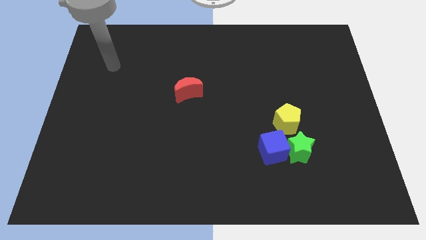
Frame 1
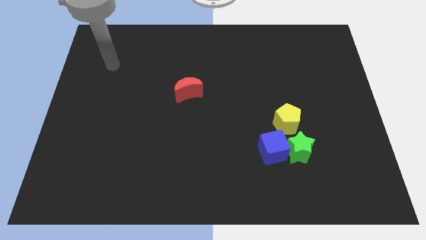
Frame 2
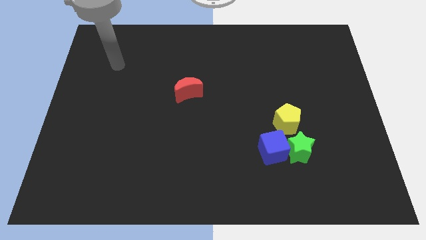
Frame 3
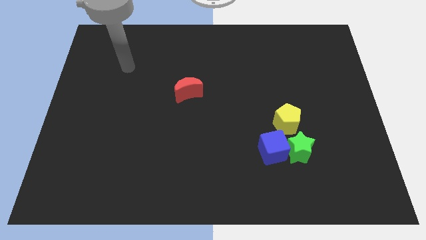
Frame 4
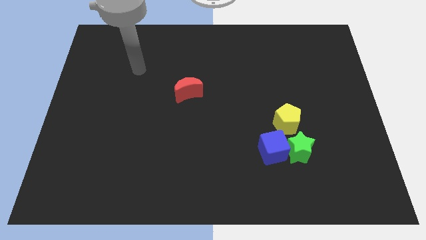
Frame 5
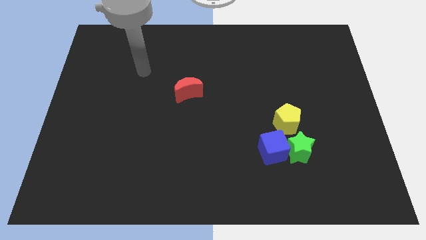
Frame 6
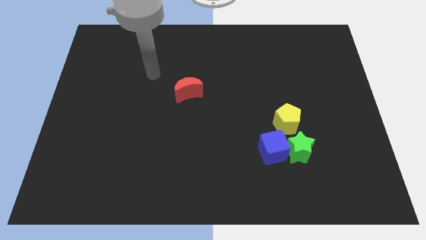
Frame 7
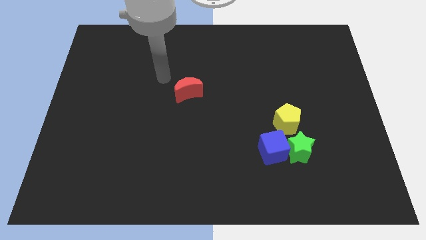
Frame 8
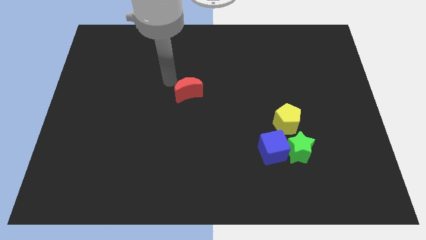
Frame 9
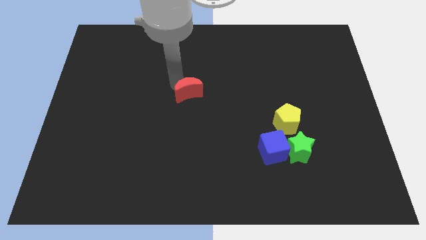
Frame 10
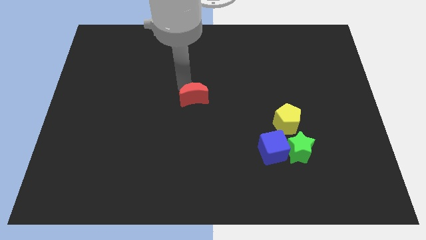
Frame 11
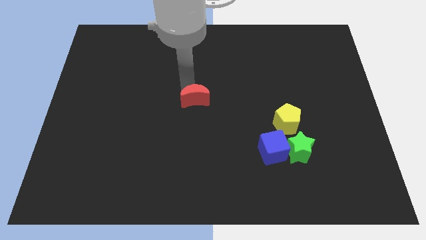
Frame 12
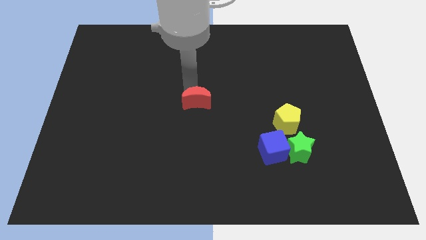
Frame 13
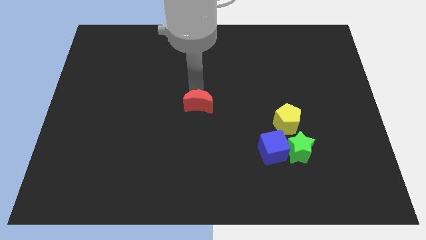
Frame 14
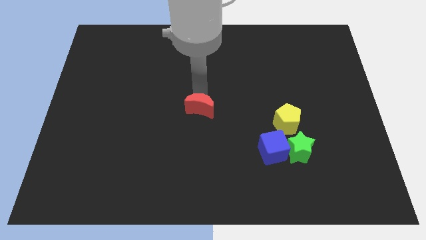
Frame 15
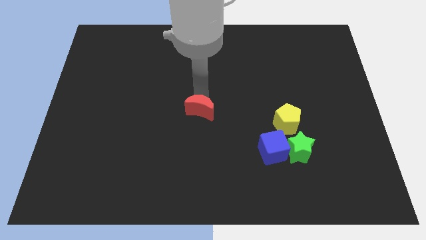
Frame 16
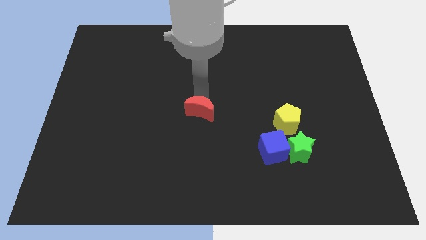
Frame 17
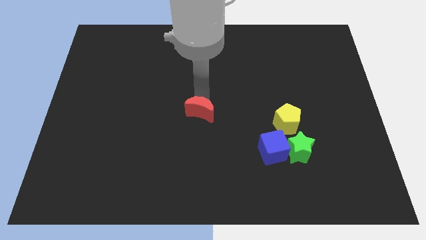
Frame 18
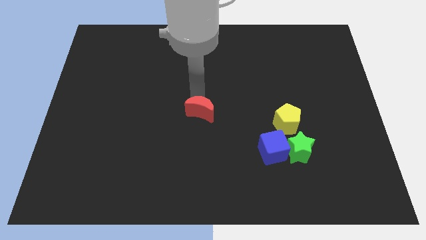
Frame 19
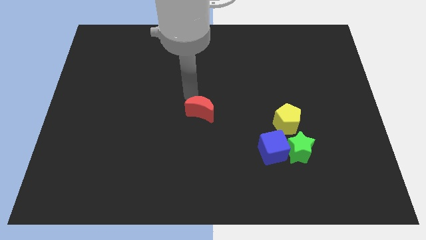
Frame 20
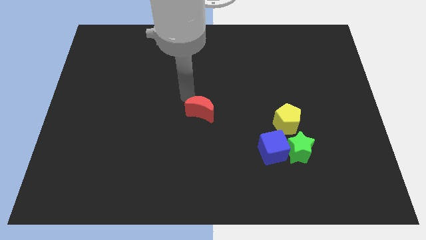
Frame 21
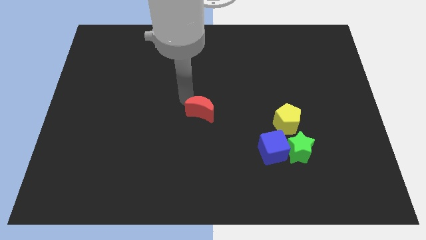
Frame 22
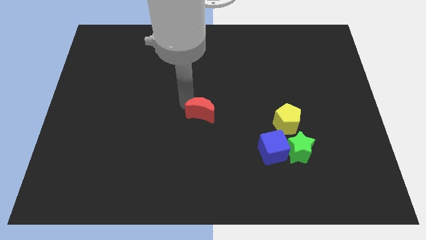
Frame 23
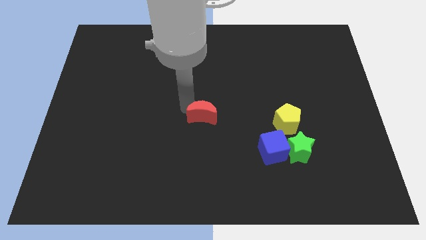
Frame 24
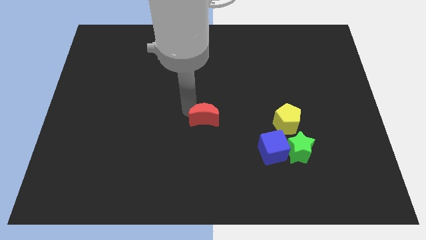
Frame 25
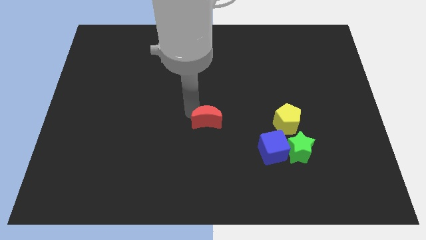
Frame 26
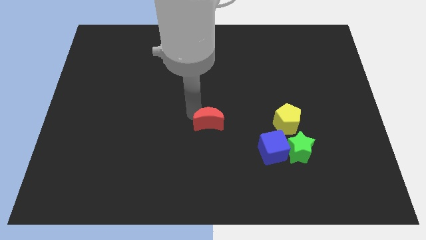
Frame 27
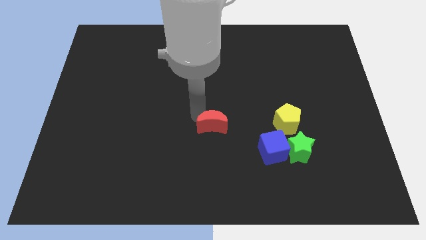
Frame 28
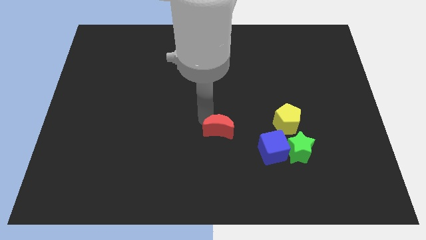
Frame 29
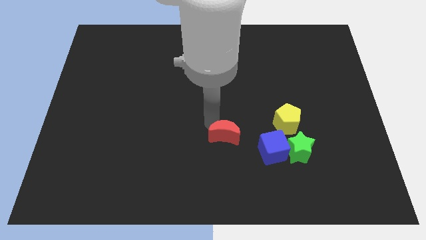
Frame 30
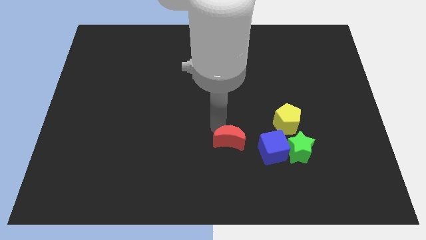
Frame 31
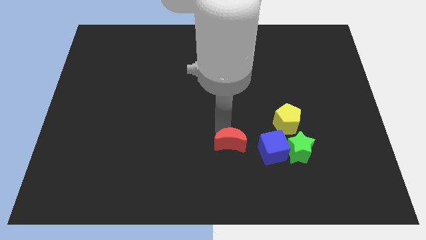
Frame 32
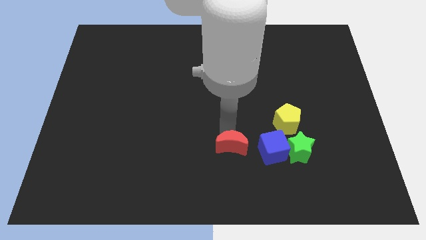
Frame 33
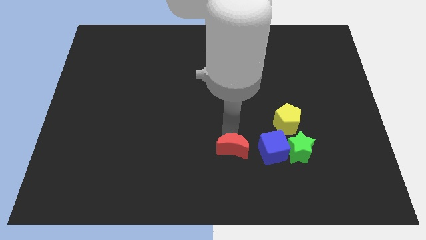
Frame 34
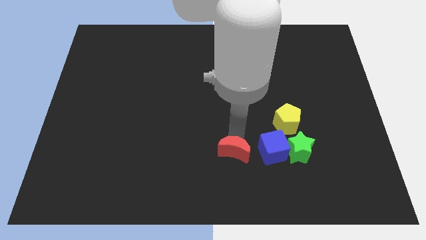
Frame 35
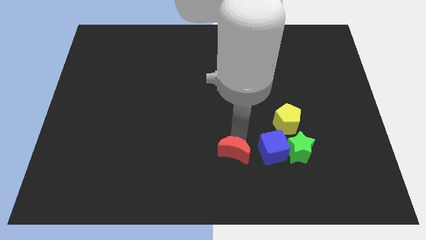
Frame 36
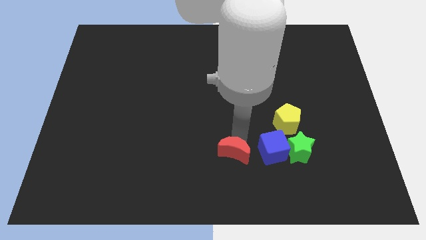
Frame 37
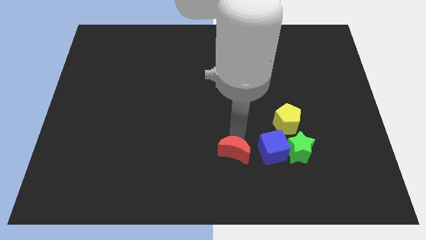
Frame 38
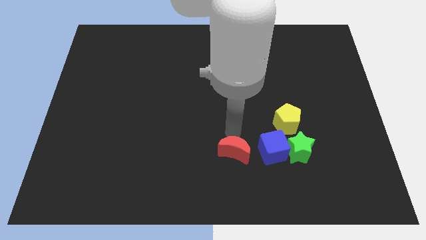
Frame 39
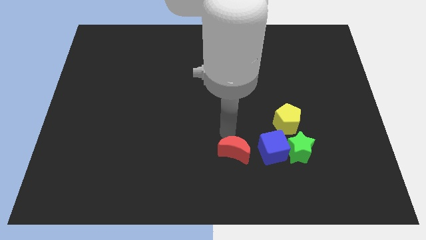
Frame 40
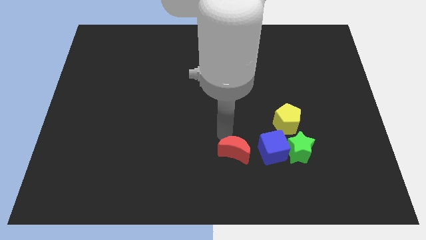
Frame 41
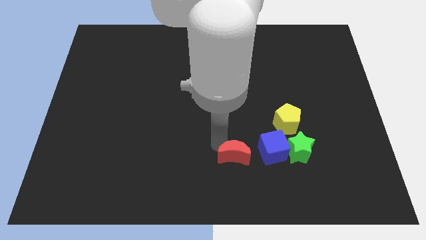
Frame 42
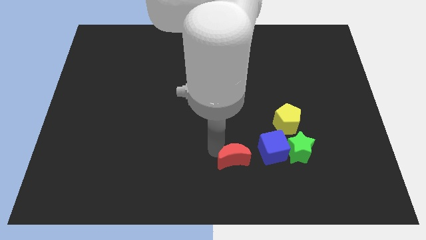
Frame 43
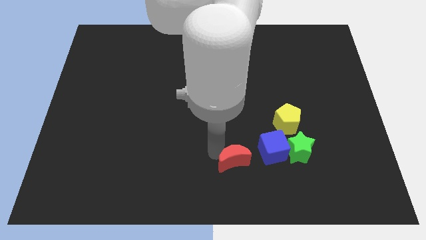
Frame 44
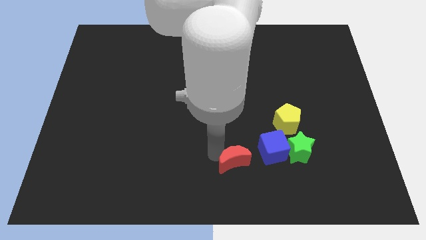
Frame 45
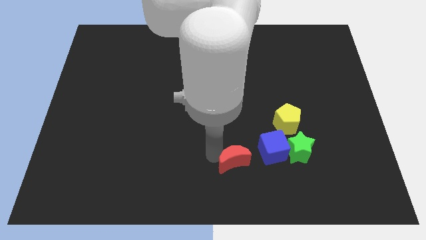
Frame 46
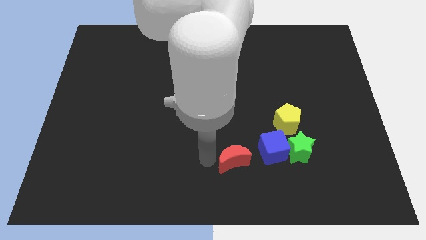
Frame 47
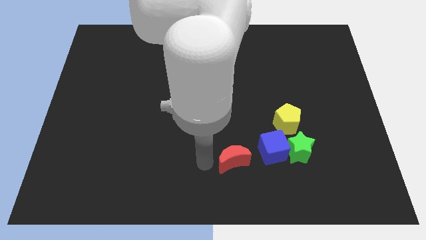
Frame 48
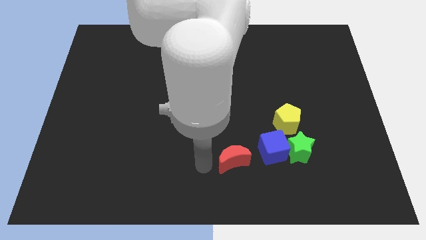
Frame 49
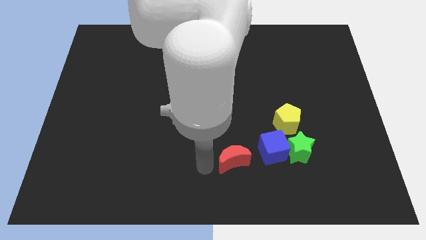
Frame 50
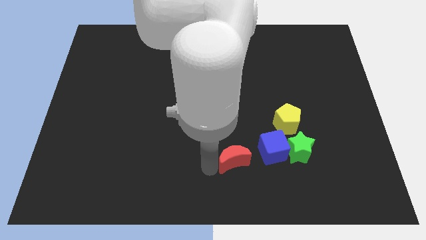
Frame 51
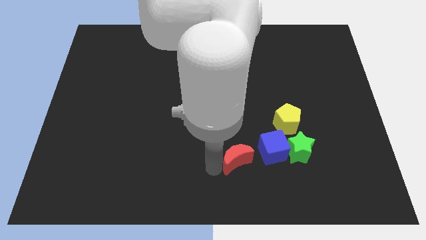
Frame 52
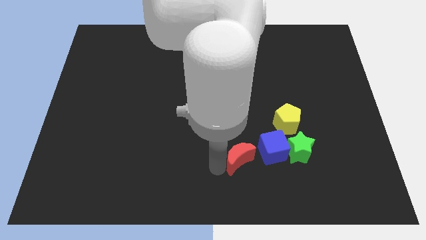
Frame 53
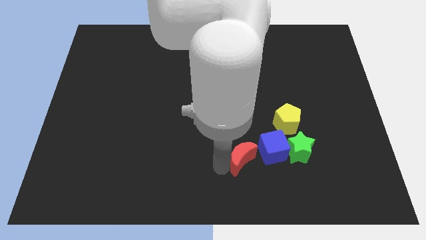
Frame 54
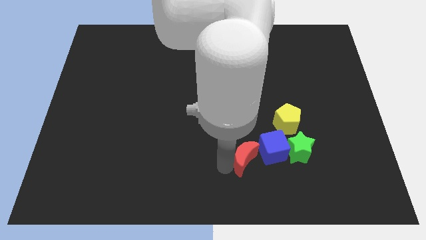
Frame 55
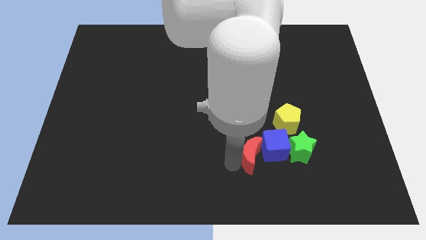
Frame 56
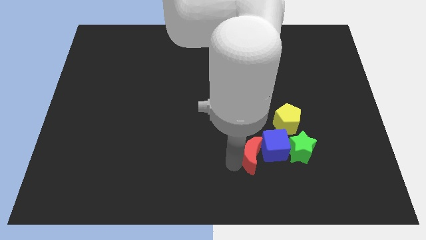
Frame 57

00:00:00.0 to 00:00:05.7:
slide the red moon towards the blue cube

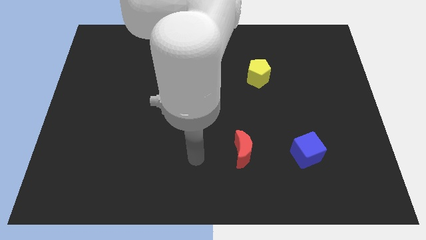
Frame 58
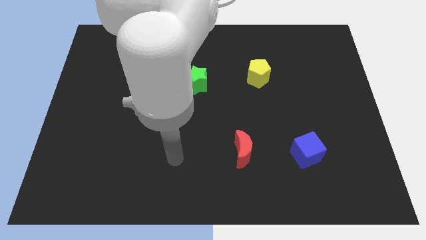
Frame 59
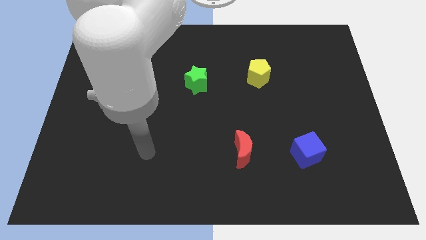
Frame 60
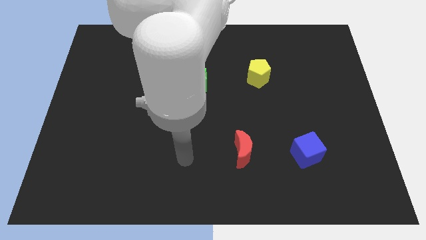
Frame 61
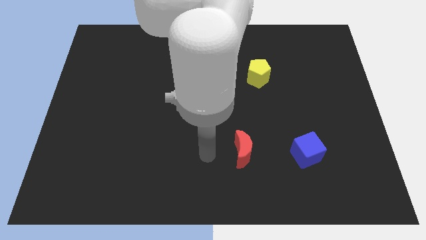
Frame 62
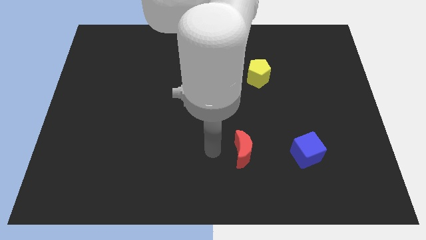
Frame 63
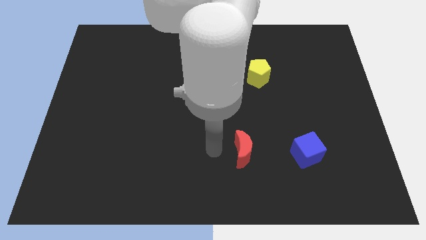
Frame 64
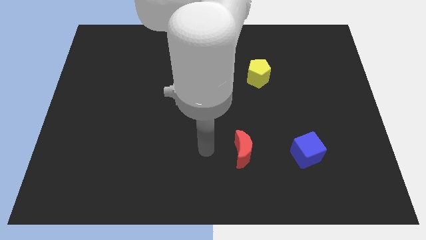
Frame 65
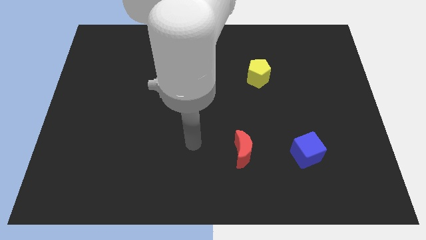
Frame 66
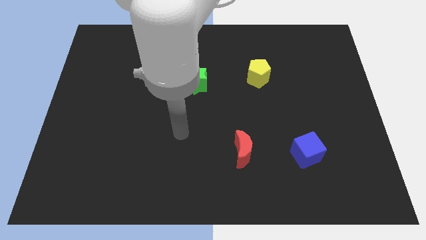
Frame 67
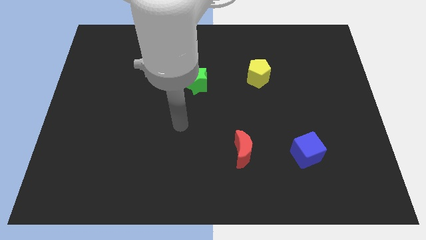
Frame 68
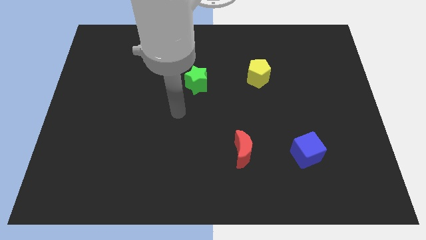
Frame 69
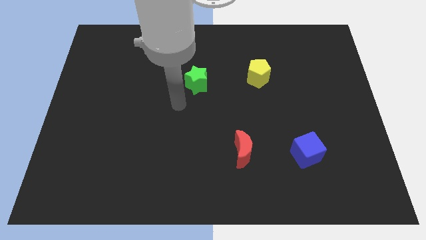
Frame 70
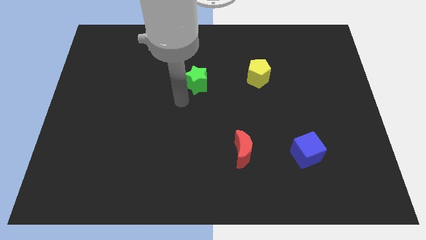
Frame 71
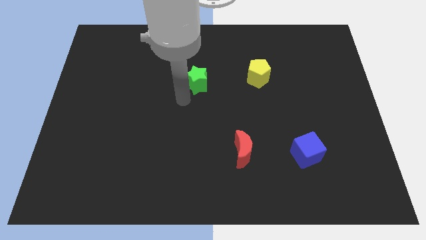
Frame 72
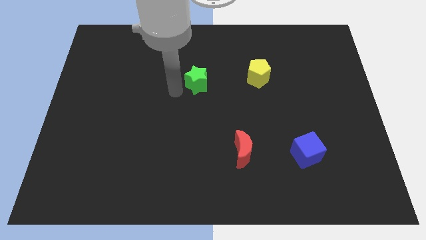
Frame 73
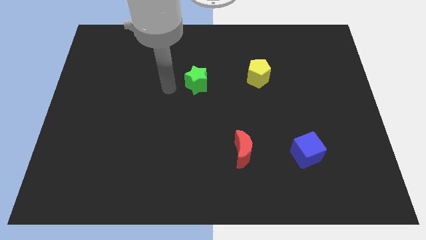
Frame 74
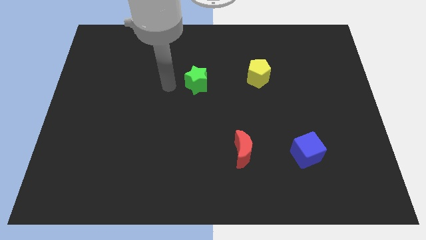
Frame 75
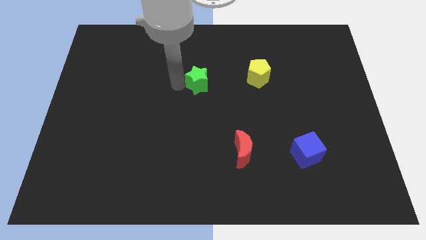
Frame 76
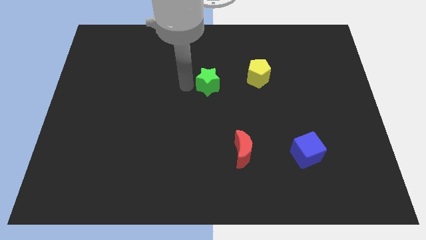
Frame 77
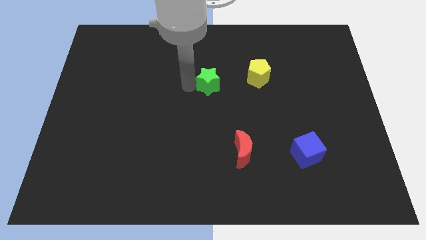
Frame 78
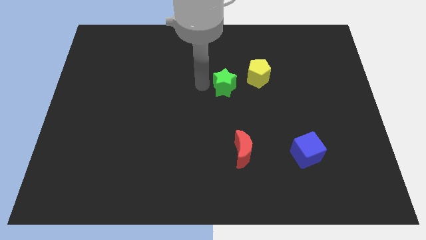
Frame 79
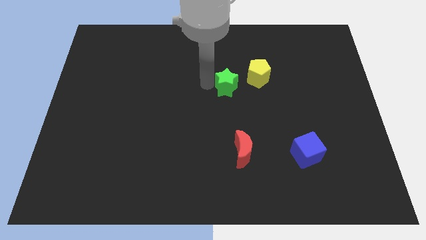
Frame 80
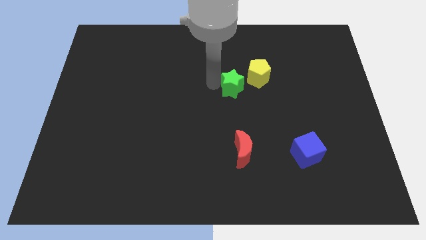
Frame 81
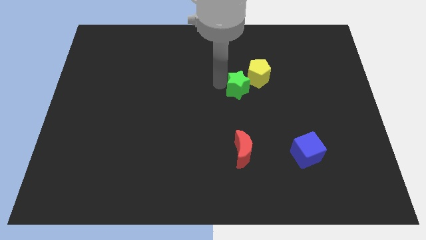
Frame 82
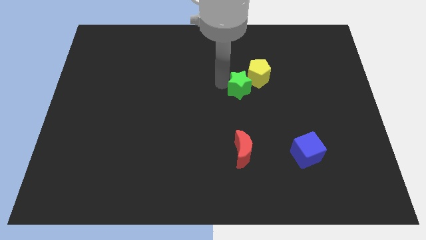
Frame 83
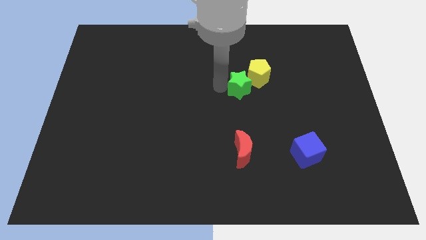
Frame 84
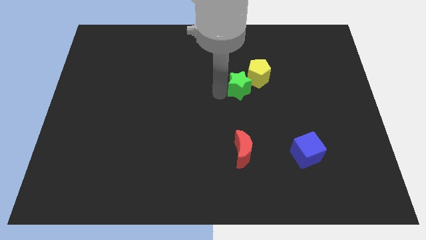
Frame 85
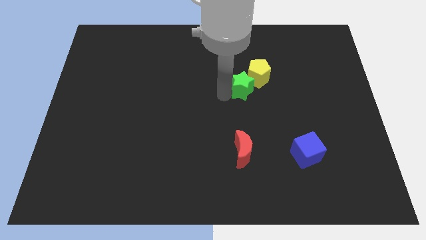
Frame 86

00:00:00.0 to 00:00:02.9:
move the green star to the yellow pentagon
